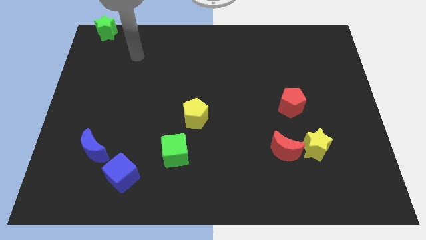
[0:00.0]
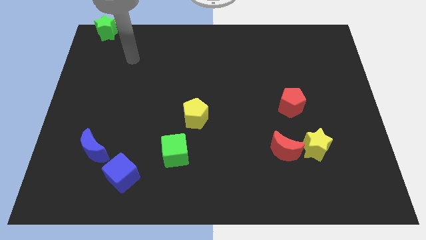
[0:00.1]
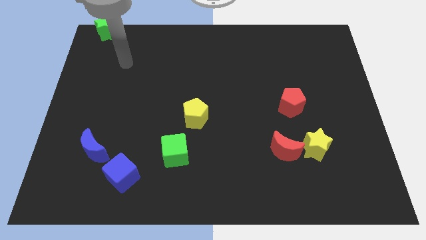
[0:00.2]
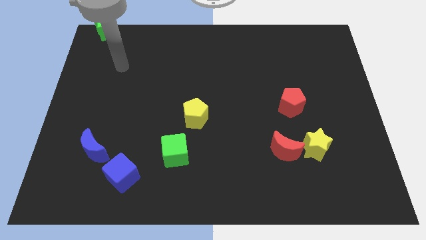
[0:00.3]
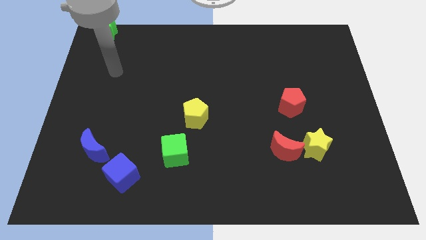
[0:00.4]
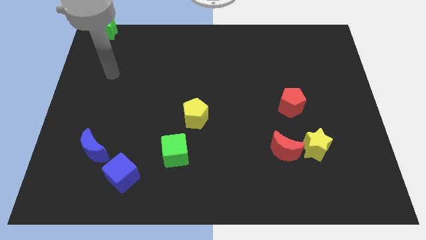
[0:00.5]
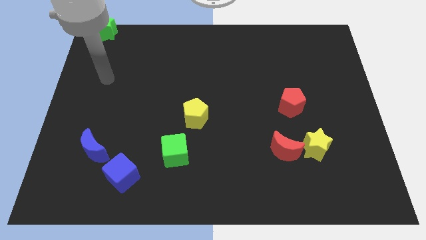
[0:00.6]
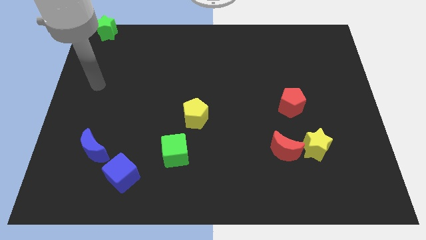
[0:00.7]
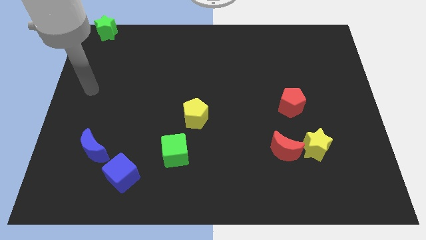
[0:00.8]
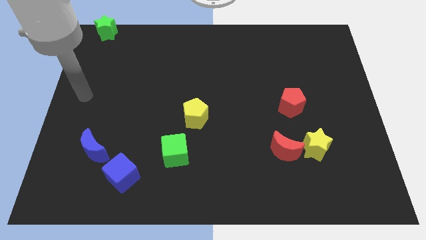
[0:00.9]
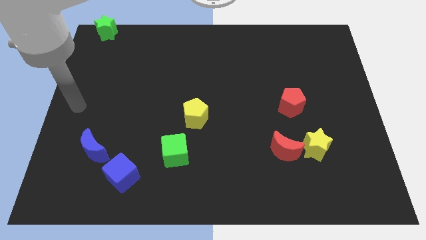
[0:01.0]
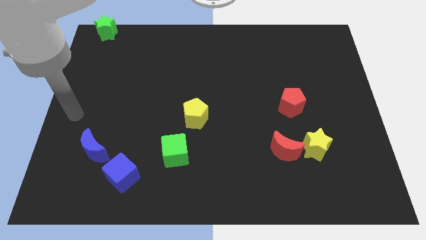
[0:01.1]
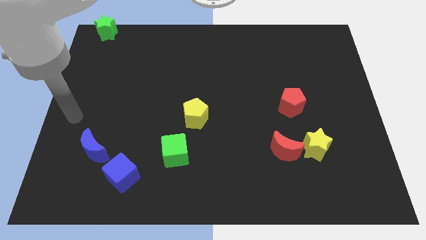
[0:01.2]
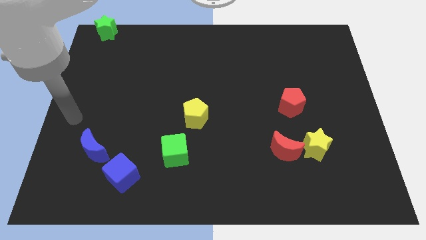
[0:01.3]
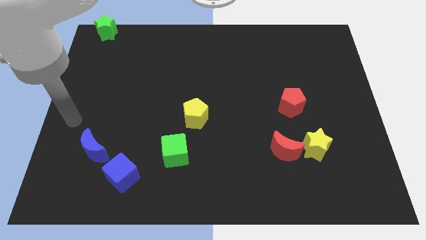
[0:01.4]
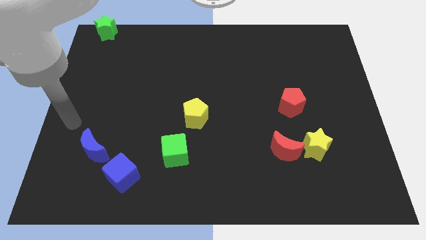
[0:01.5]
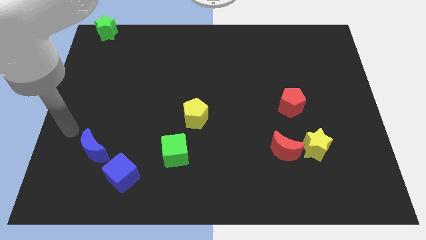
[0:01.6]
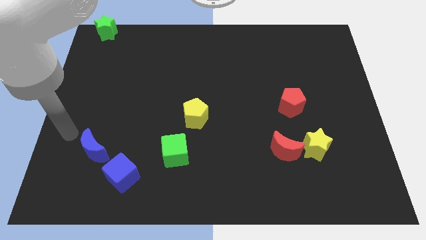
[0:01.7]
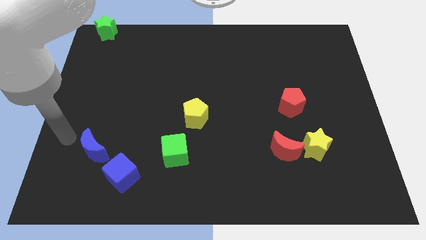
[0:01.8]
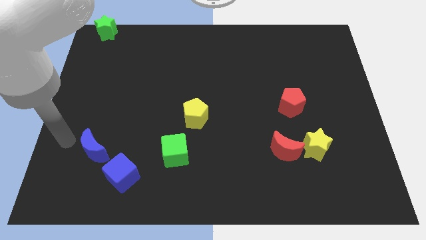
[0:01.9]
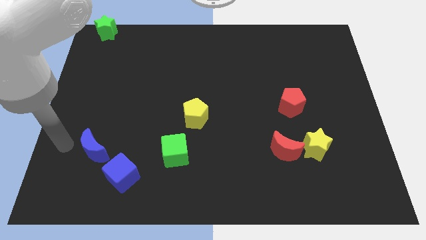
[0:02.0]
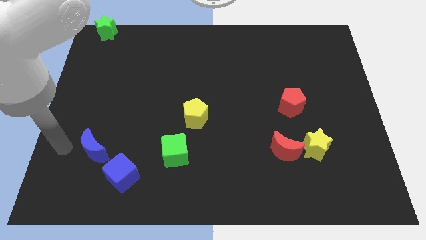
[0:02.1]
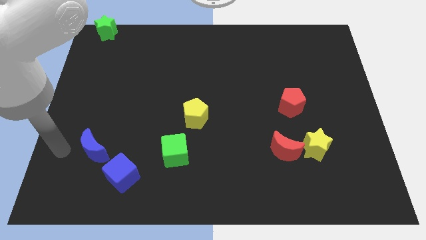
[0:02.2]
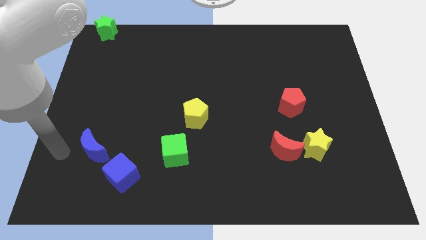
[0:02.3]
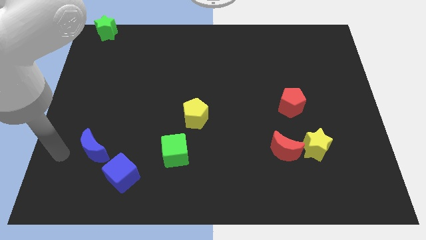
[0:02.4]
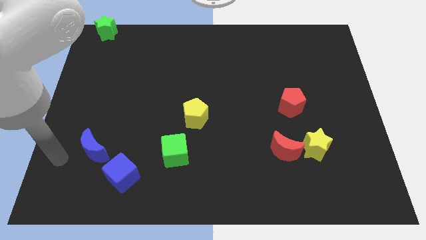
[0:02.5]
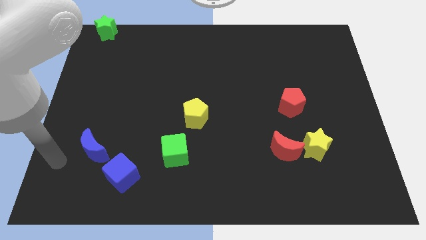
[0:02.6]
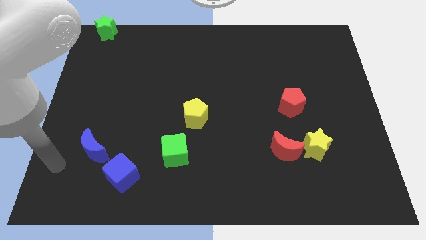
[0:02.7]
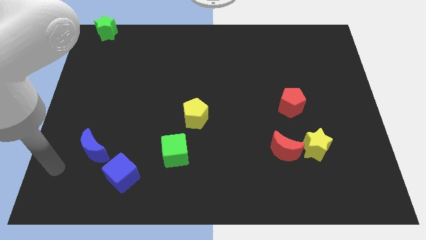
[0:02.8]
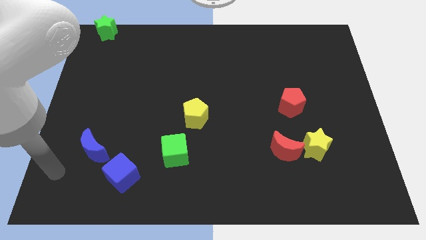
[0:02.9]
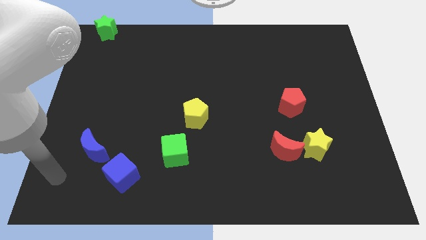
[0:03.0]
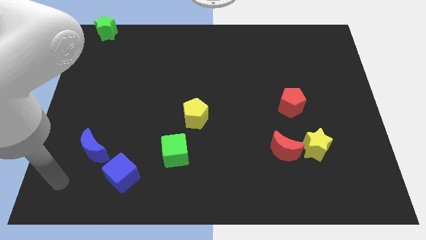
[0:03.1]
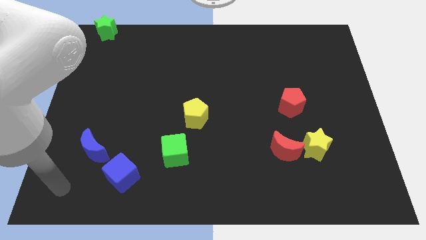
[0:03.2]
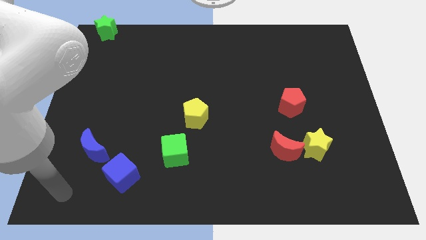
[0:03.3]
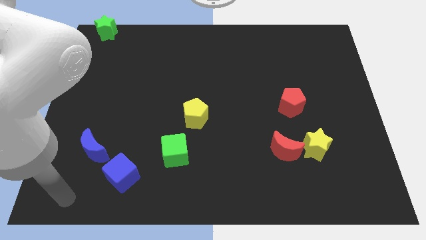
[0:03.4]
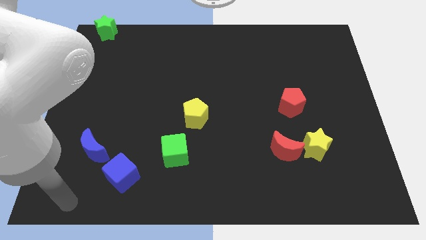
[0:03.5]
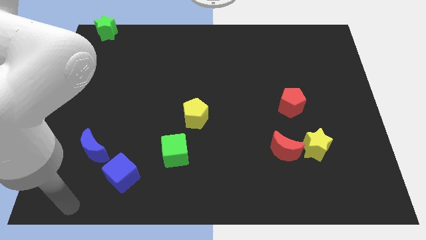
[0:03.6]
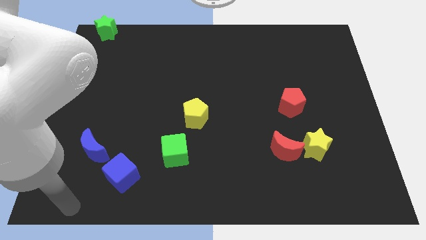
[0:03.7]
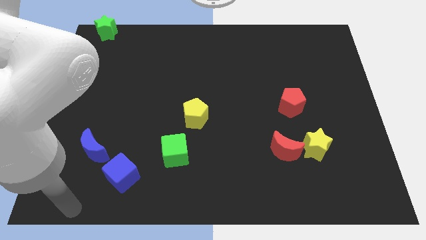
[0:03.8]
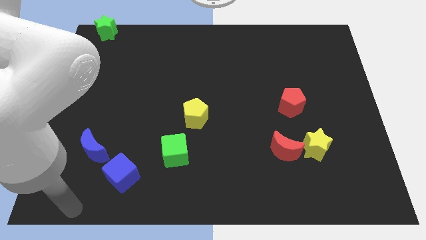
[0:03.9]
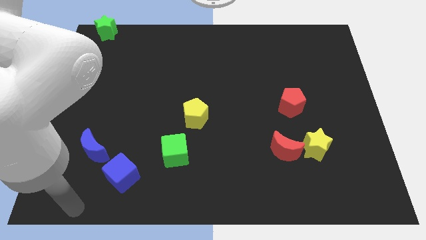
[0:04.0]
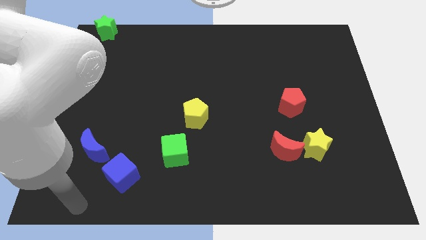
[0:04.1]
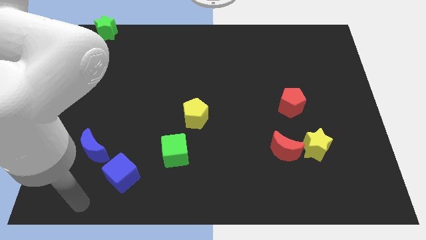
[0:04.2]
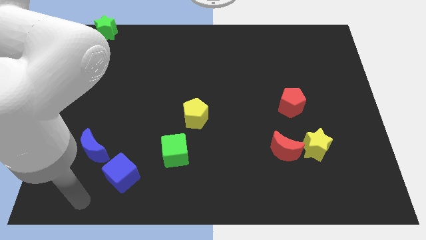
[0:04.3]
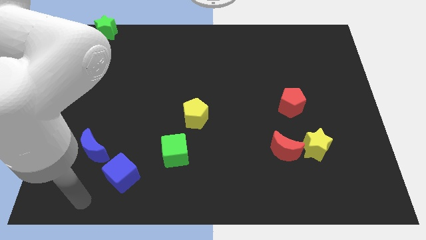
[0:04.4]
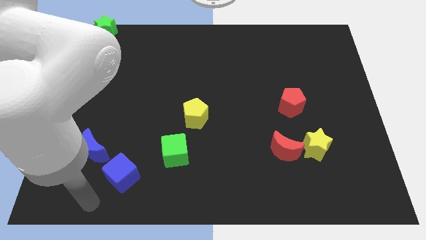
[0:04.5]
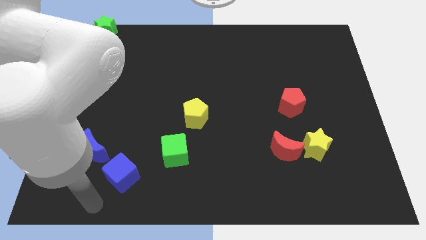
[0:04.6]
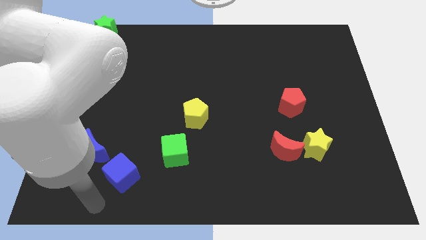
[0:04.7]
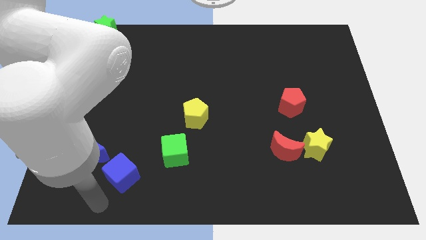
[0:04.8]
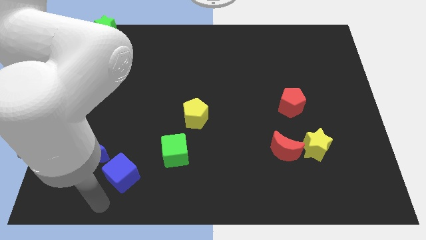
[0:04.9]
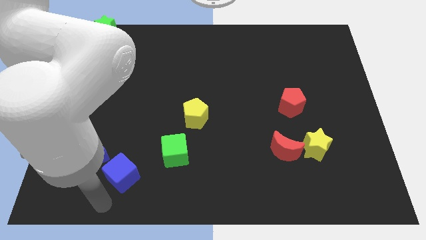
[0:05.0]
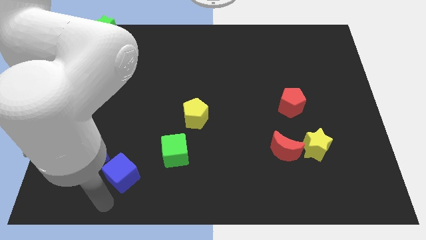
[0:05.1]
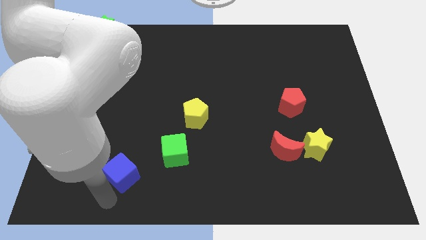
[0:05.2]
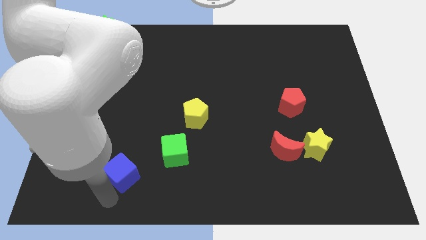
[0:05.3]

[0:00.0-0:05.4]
point the arm below the blue cube

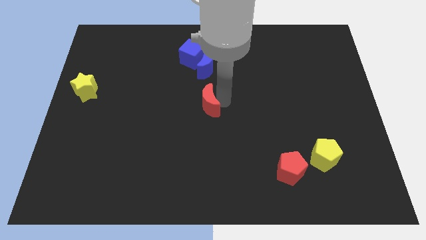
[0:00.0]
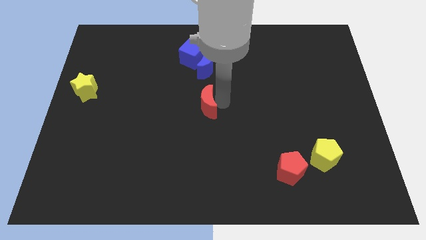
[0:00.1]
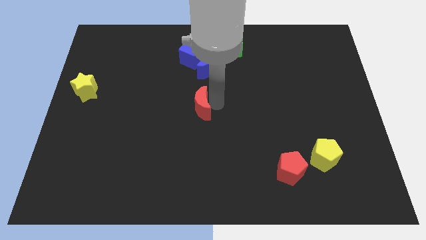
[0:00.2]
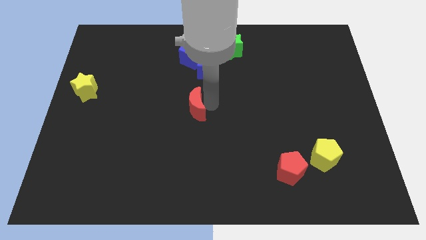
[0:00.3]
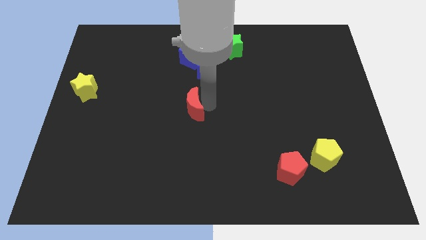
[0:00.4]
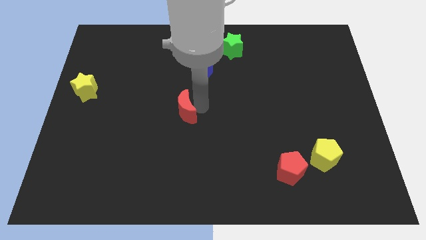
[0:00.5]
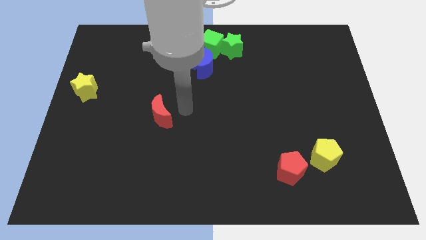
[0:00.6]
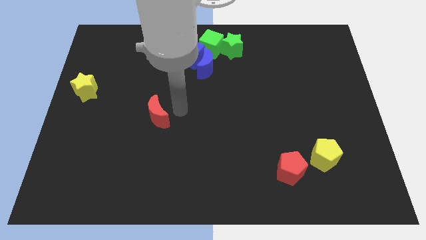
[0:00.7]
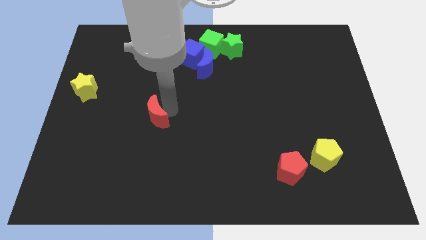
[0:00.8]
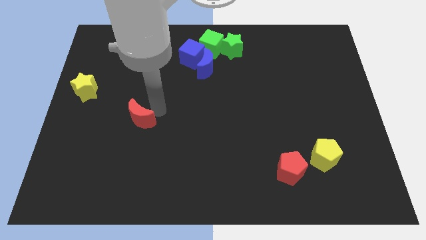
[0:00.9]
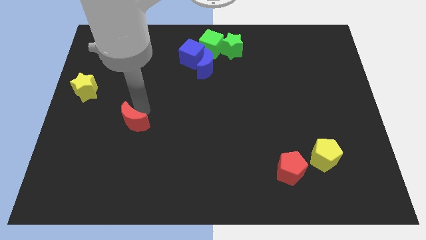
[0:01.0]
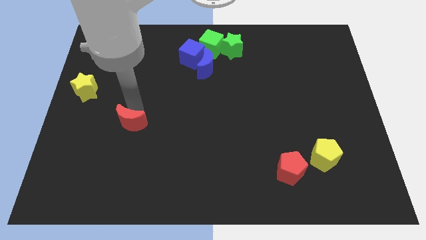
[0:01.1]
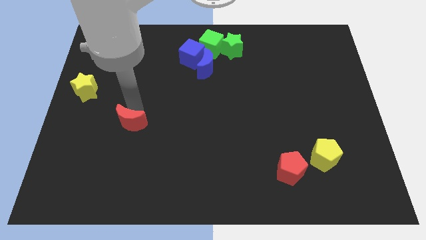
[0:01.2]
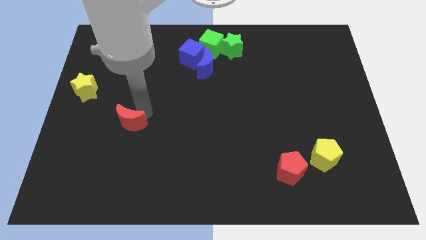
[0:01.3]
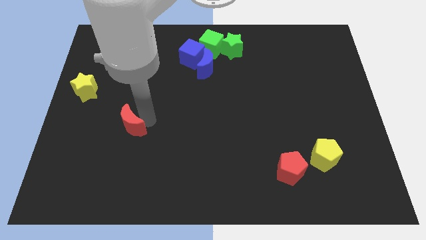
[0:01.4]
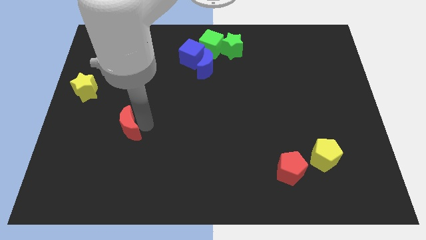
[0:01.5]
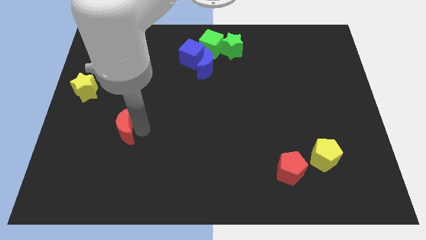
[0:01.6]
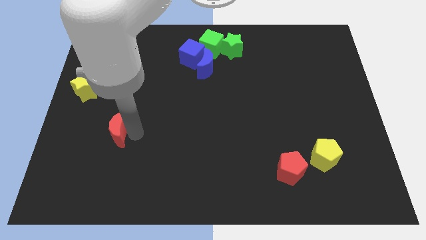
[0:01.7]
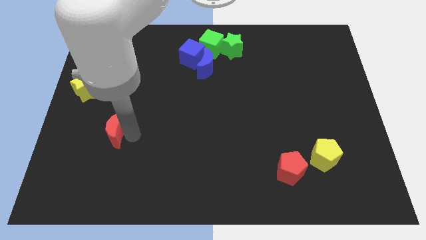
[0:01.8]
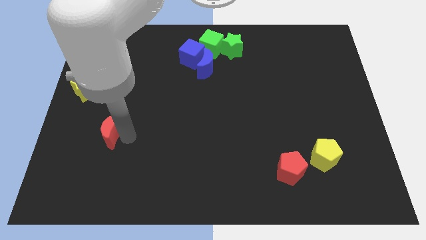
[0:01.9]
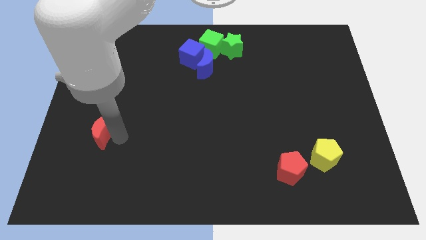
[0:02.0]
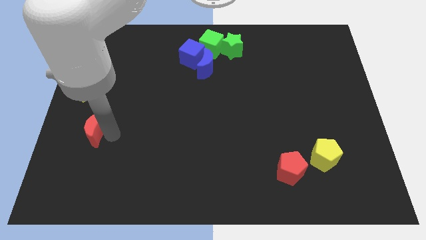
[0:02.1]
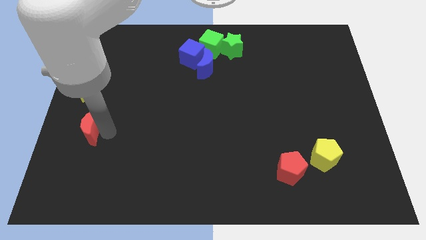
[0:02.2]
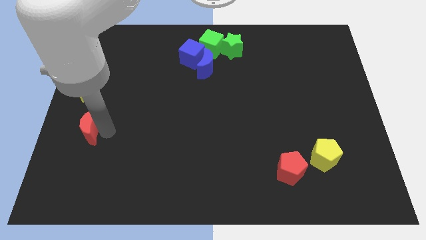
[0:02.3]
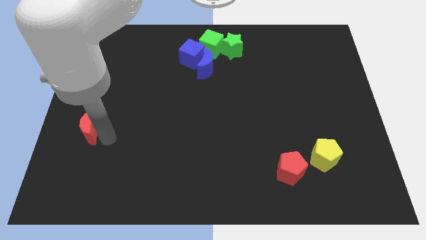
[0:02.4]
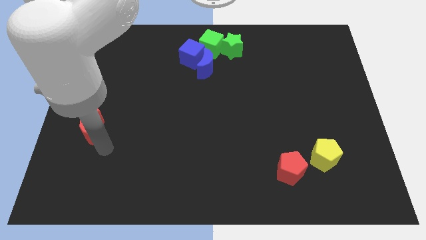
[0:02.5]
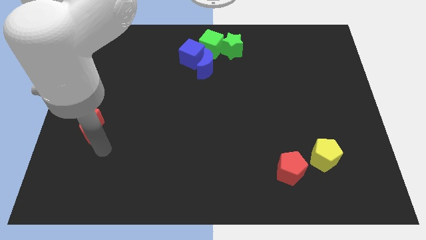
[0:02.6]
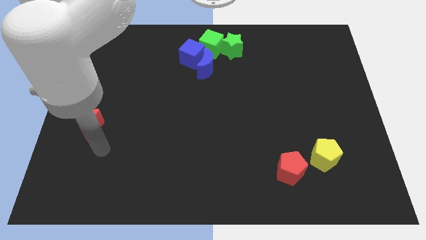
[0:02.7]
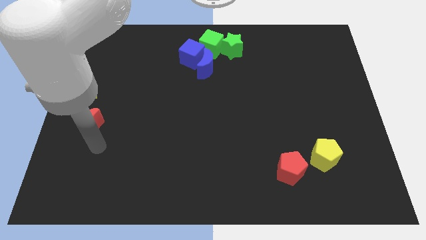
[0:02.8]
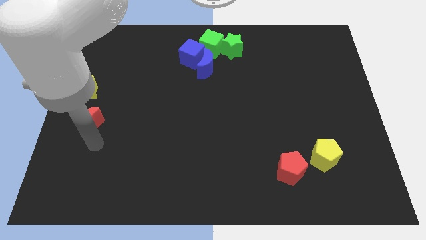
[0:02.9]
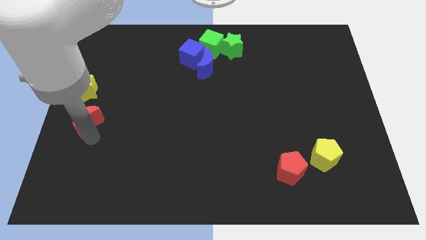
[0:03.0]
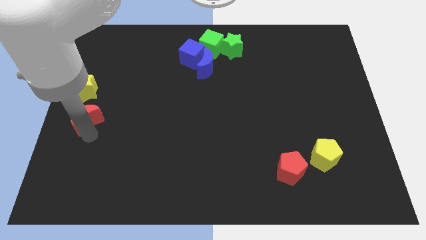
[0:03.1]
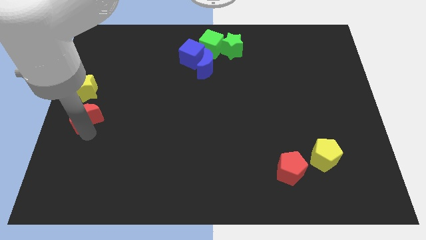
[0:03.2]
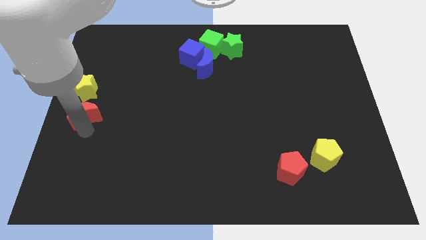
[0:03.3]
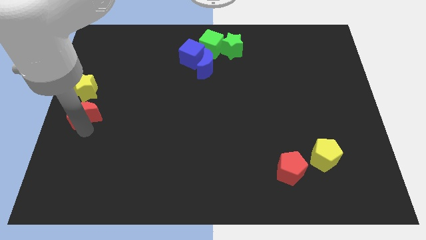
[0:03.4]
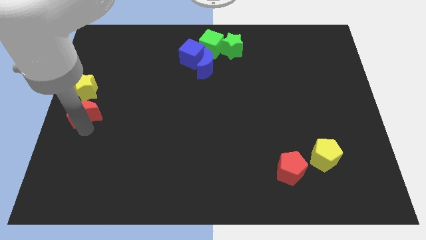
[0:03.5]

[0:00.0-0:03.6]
place red crescent below yellow star
